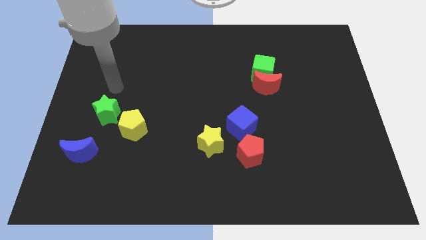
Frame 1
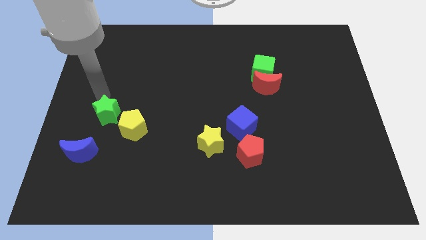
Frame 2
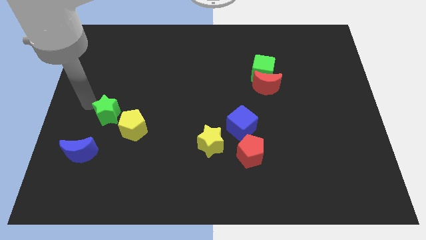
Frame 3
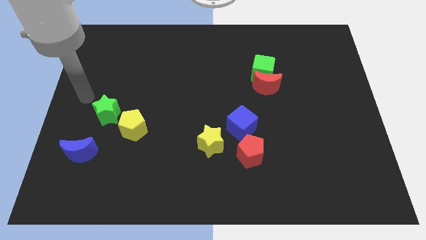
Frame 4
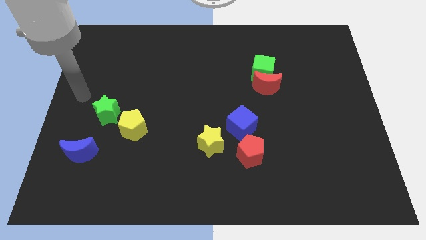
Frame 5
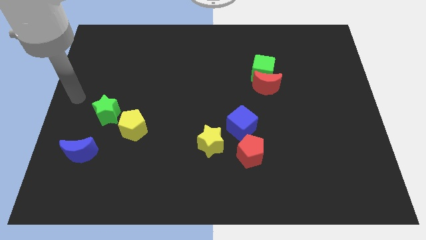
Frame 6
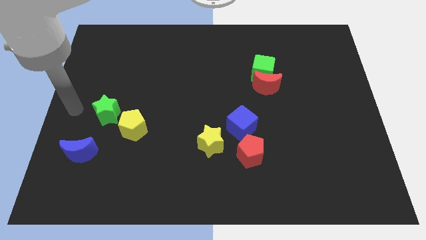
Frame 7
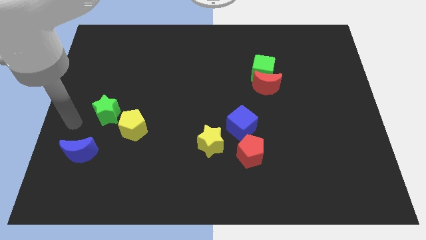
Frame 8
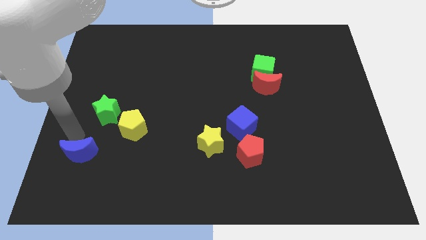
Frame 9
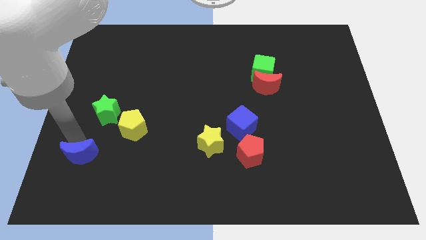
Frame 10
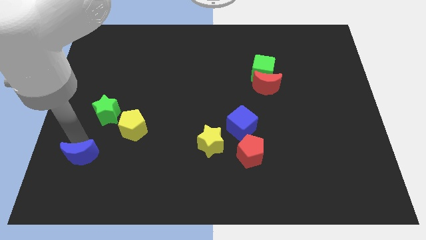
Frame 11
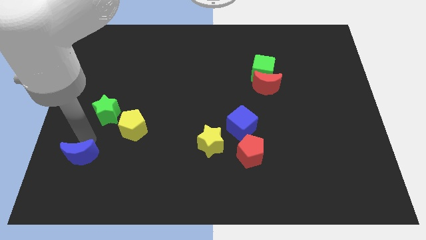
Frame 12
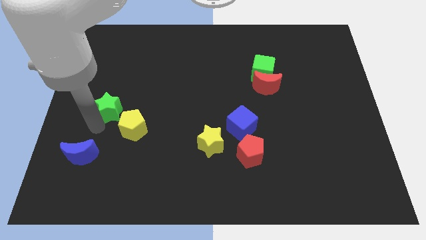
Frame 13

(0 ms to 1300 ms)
slightly move the blue crescent

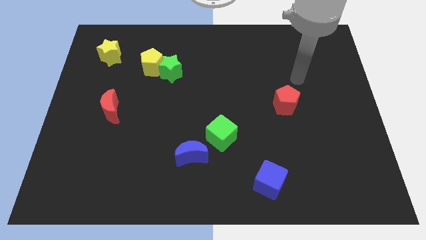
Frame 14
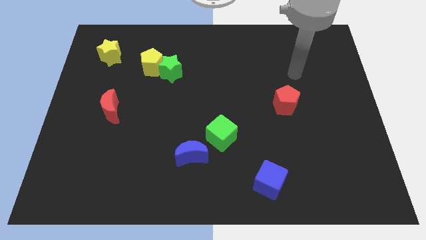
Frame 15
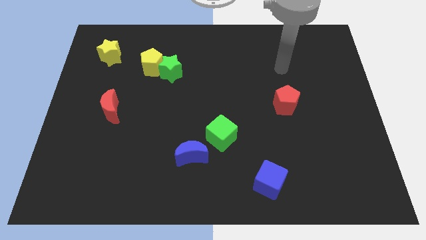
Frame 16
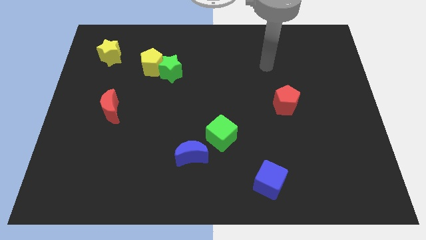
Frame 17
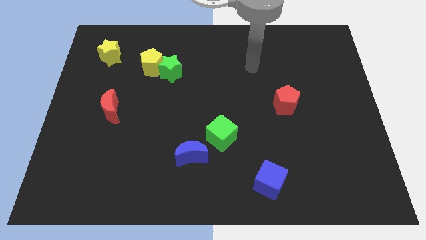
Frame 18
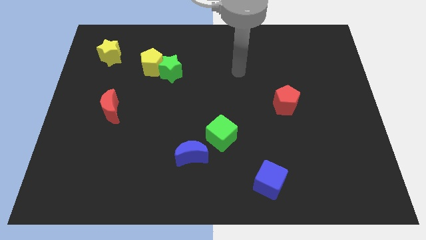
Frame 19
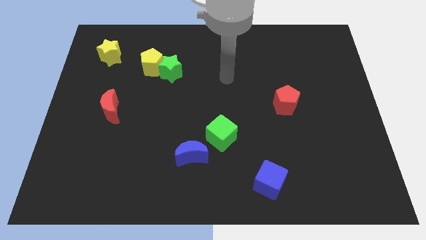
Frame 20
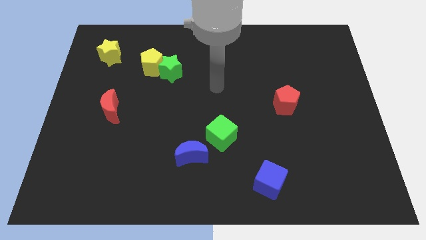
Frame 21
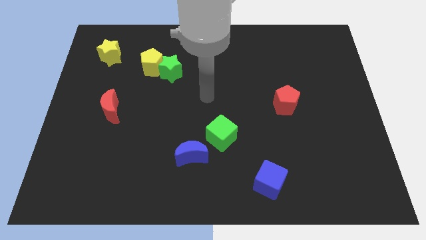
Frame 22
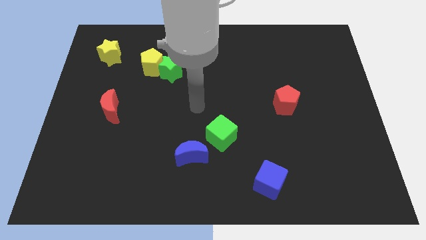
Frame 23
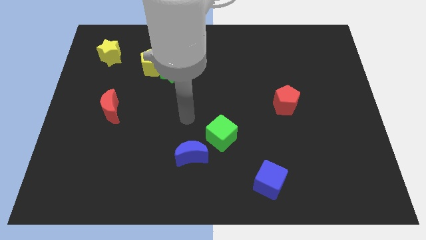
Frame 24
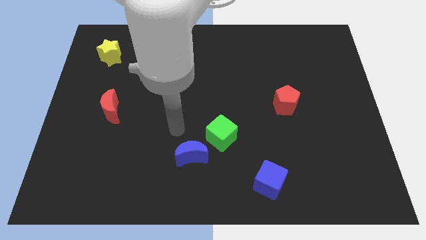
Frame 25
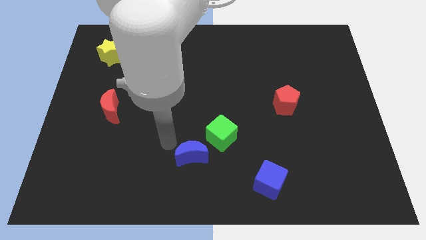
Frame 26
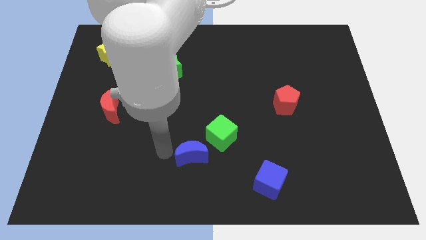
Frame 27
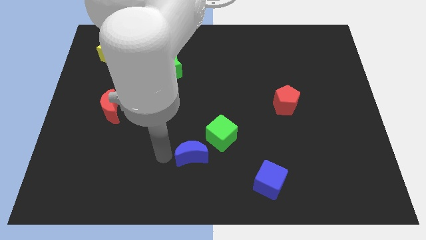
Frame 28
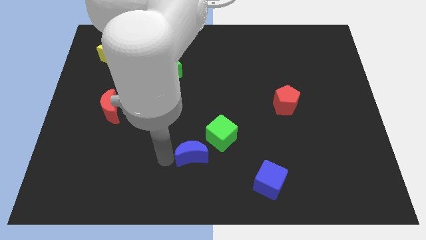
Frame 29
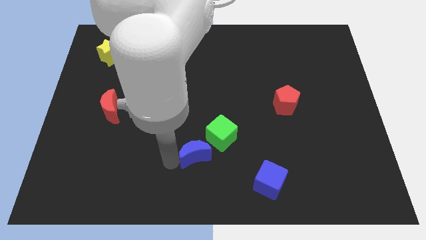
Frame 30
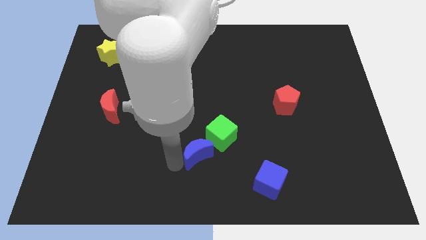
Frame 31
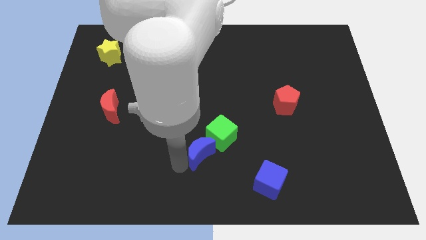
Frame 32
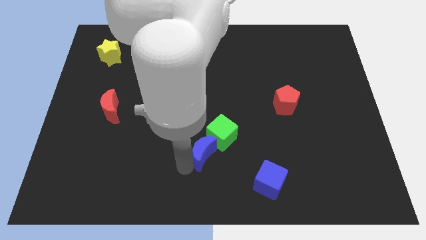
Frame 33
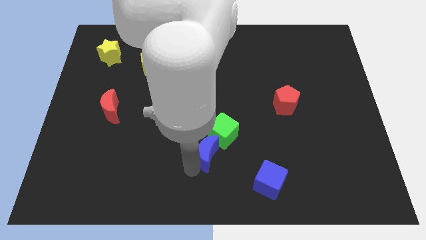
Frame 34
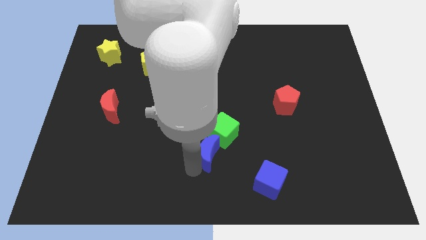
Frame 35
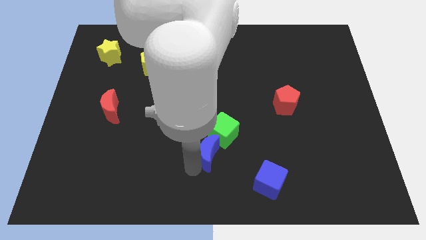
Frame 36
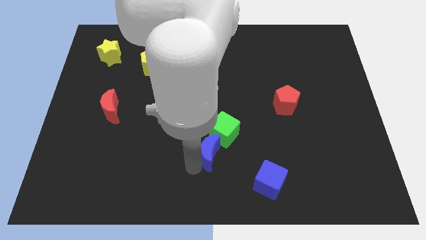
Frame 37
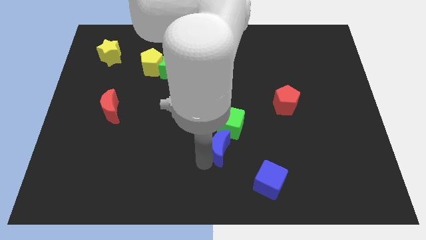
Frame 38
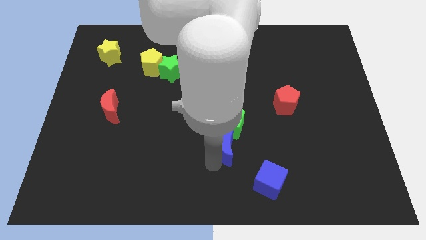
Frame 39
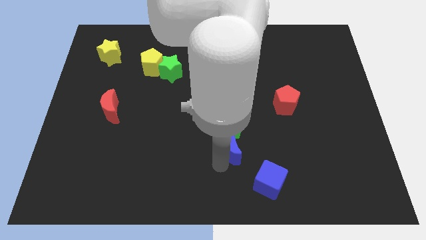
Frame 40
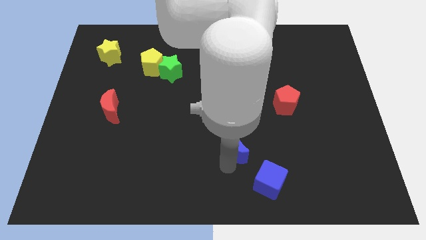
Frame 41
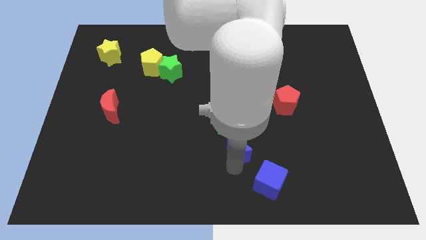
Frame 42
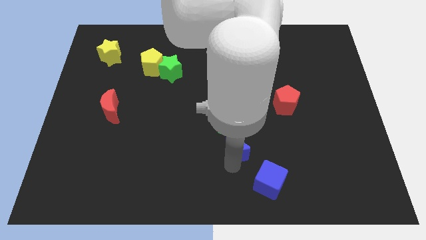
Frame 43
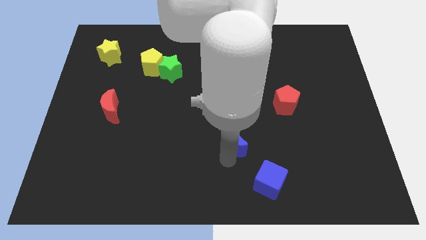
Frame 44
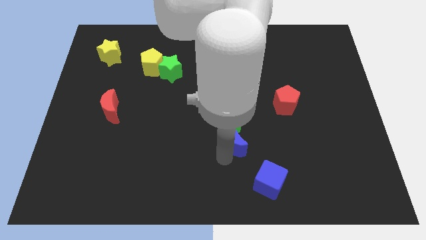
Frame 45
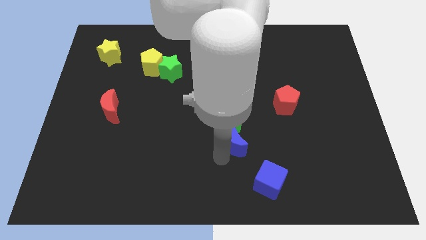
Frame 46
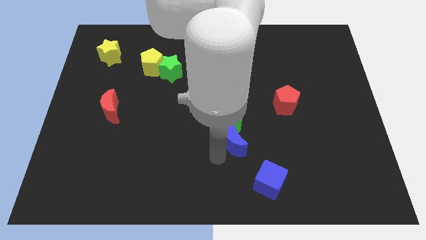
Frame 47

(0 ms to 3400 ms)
push the blue crescent close to the green cube at the top left side of the blue cube

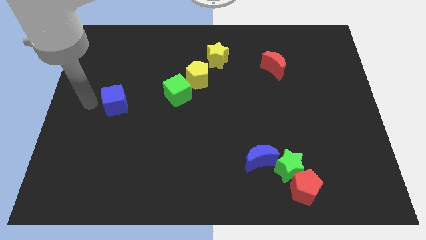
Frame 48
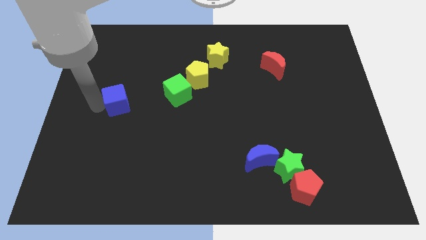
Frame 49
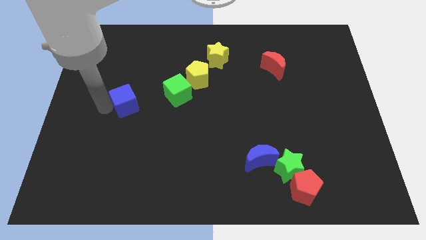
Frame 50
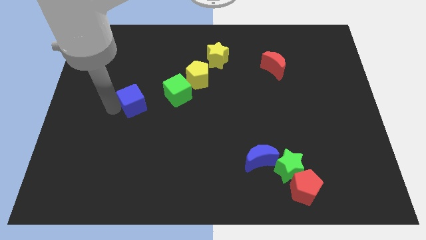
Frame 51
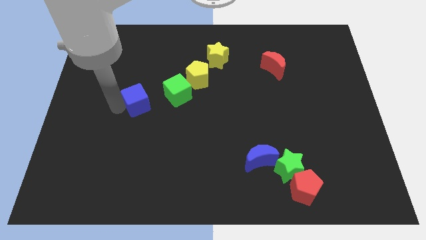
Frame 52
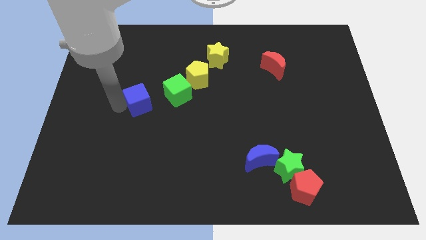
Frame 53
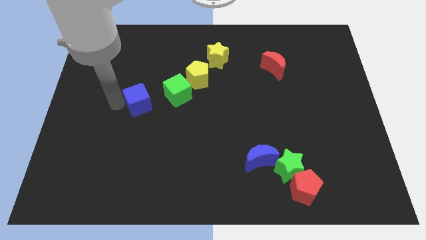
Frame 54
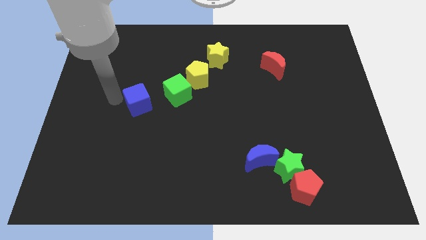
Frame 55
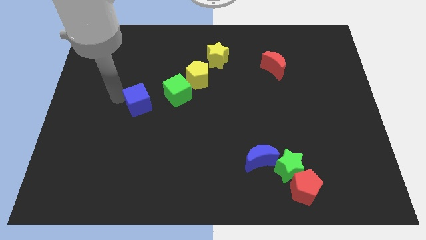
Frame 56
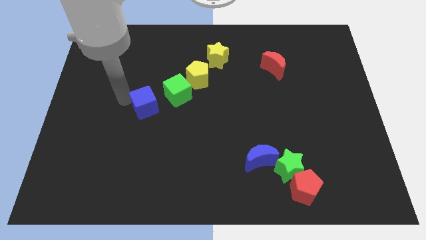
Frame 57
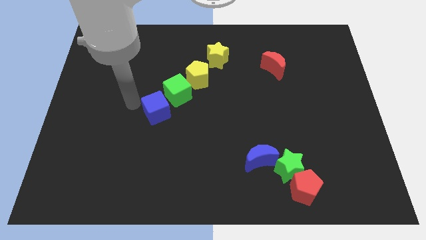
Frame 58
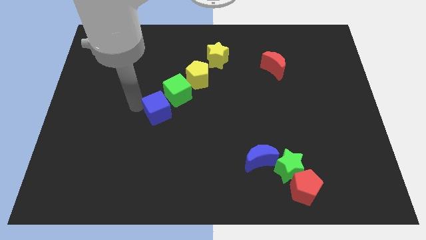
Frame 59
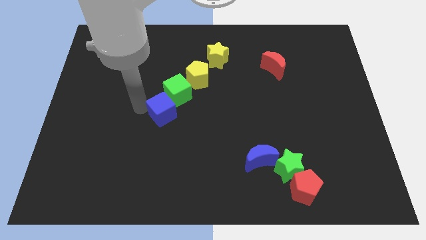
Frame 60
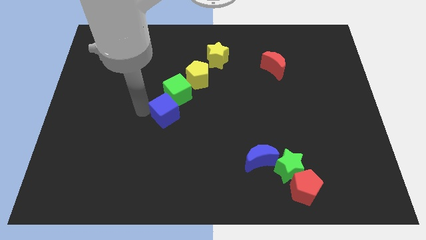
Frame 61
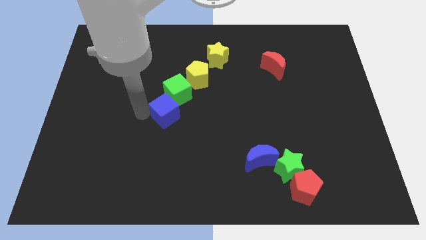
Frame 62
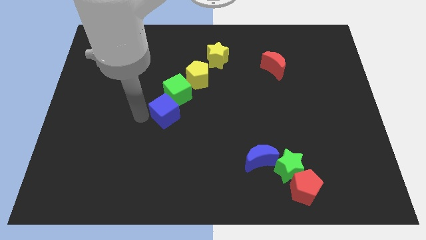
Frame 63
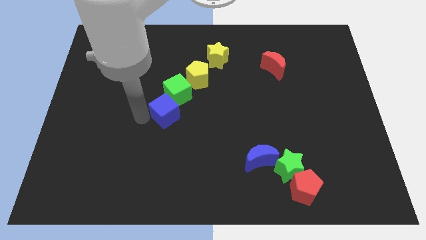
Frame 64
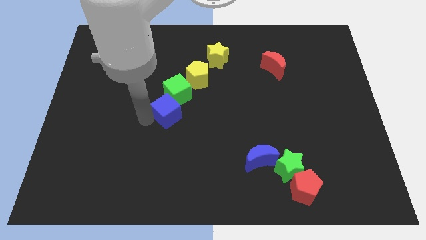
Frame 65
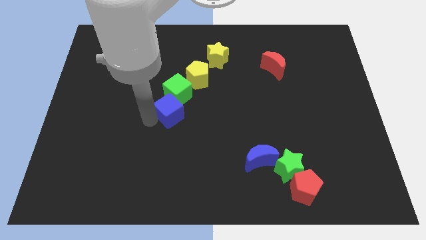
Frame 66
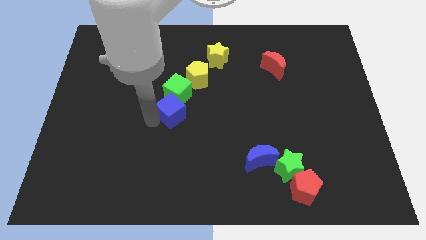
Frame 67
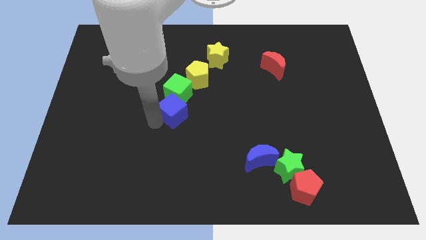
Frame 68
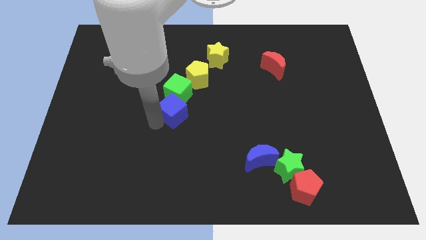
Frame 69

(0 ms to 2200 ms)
push the blue cube into the green cube

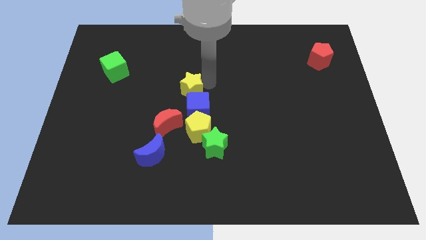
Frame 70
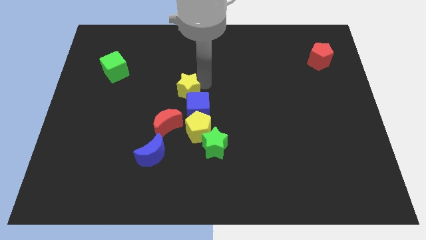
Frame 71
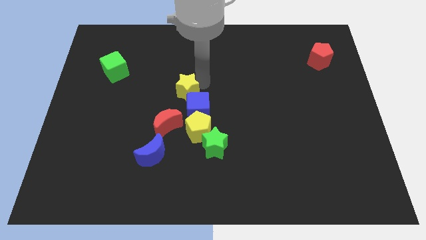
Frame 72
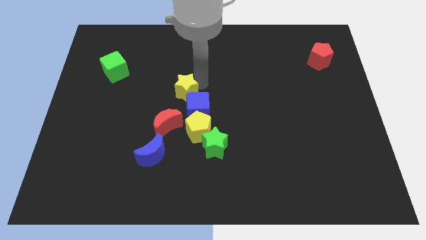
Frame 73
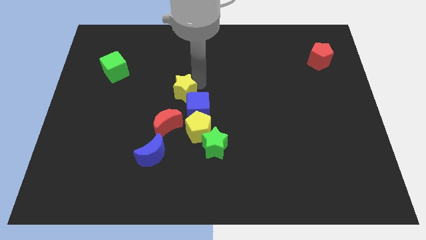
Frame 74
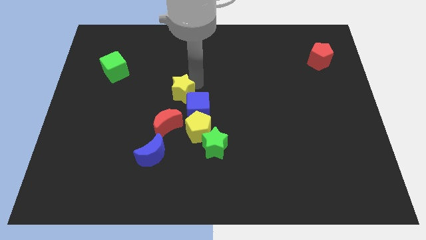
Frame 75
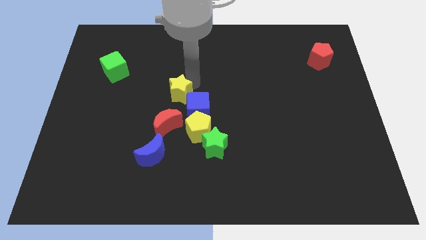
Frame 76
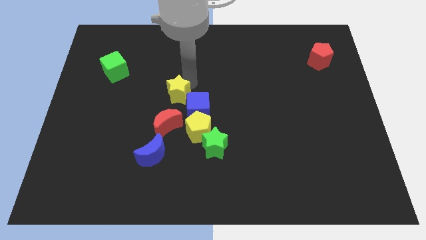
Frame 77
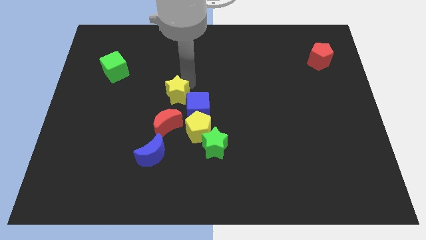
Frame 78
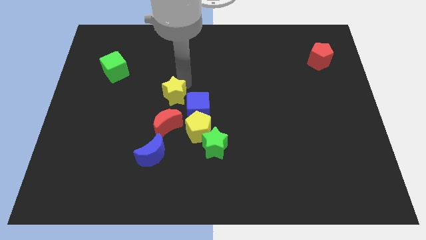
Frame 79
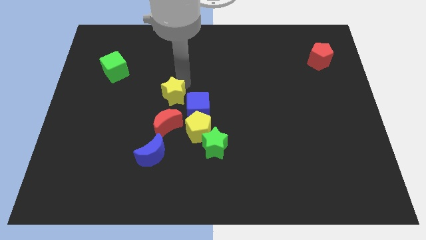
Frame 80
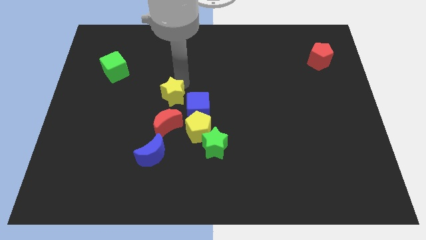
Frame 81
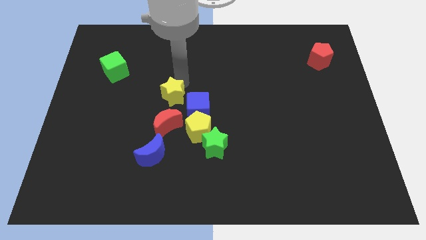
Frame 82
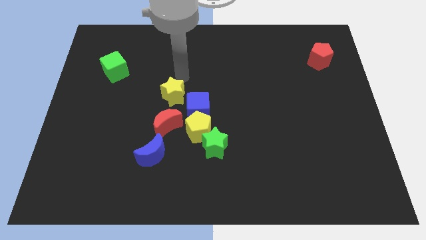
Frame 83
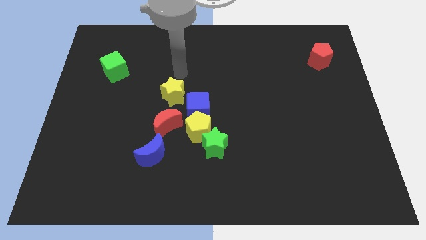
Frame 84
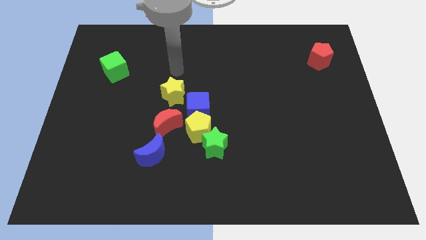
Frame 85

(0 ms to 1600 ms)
move the yellow star vertically above the red crescent

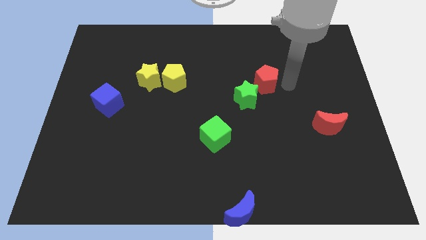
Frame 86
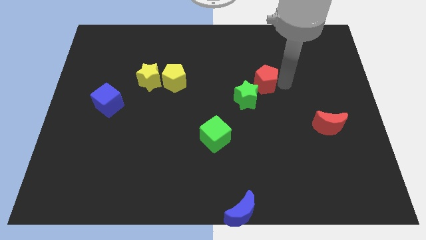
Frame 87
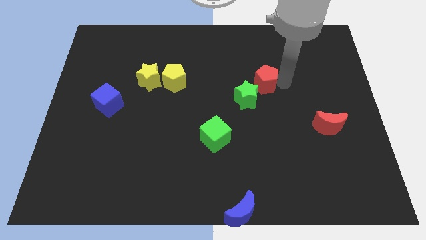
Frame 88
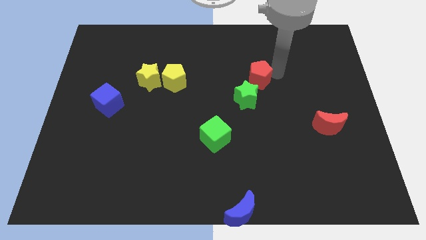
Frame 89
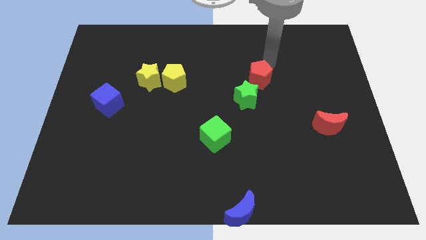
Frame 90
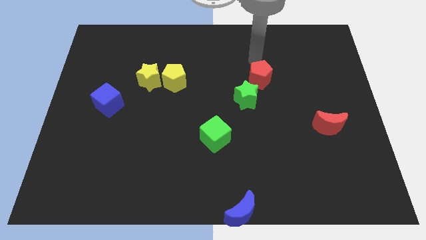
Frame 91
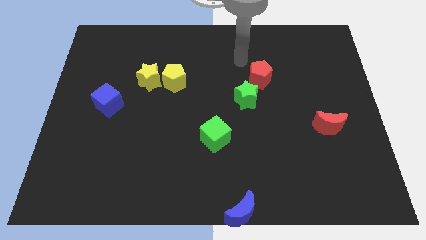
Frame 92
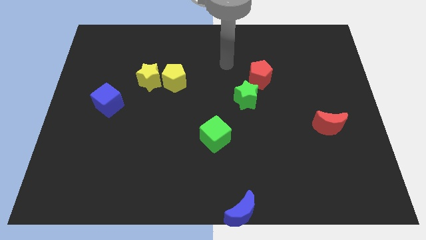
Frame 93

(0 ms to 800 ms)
move red pentagon on top right of green star
